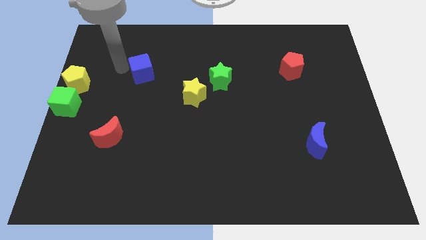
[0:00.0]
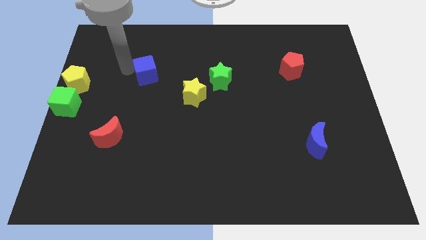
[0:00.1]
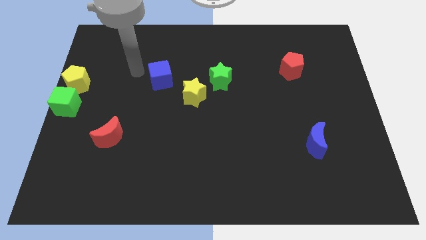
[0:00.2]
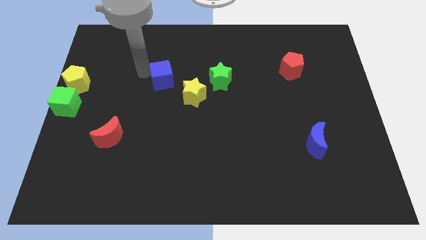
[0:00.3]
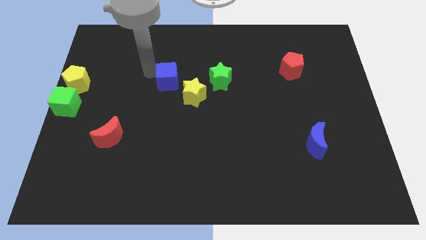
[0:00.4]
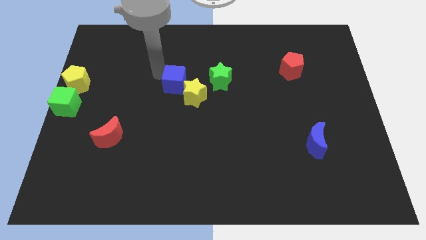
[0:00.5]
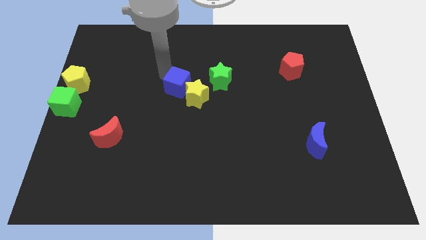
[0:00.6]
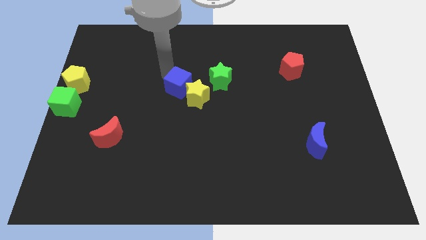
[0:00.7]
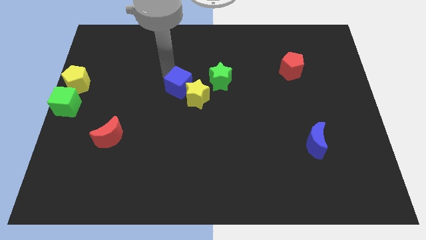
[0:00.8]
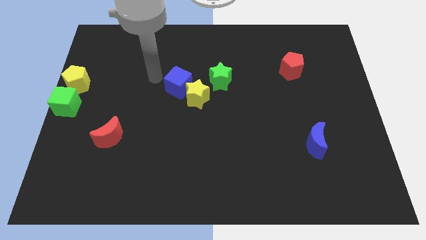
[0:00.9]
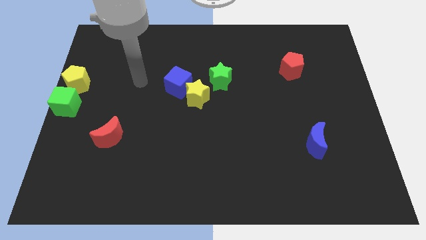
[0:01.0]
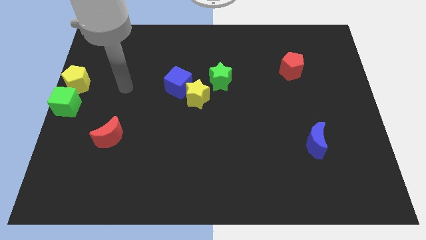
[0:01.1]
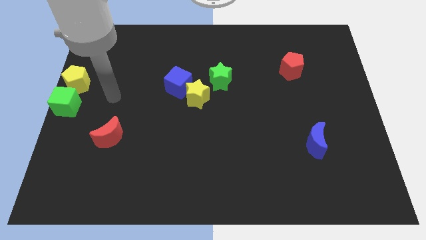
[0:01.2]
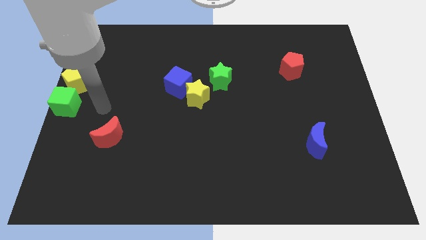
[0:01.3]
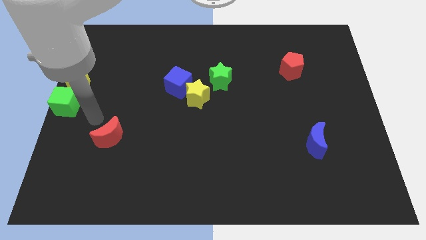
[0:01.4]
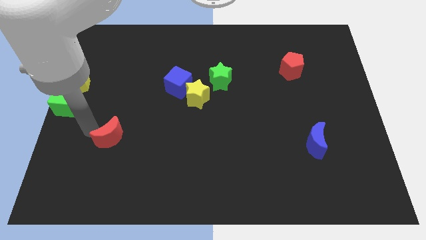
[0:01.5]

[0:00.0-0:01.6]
move blue cube towards the yellow star

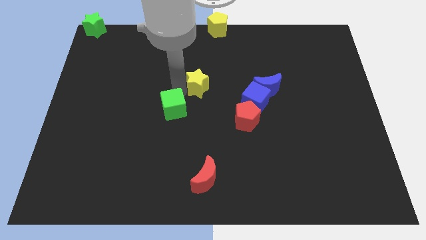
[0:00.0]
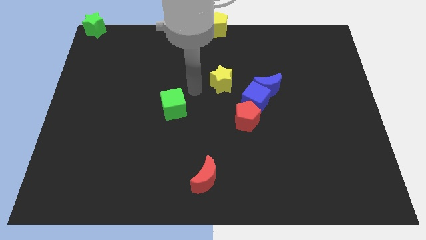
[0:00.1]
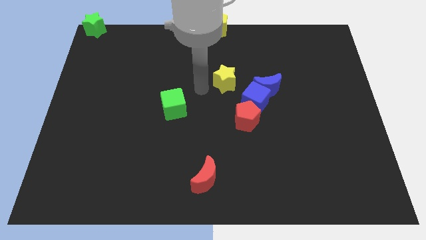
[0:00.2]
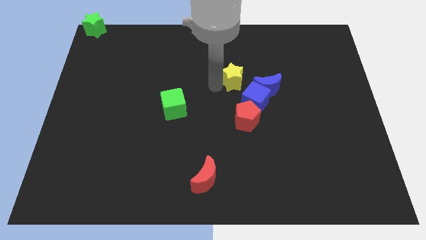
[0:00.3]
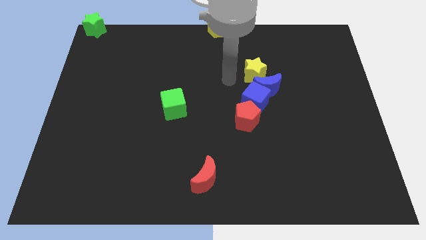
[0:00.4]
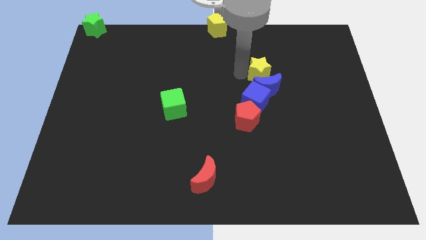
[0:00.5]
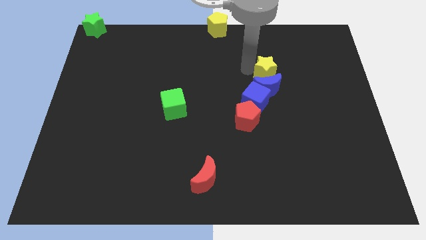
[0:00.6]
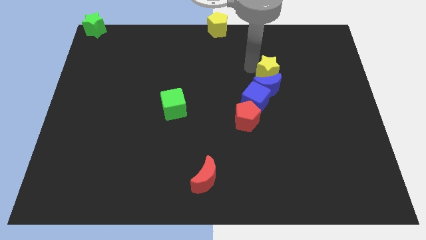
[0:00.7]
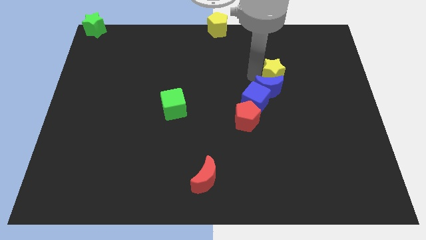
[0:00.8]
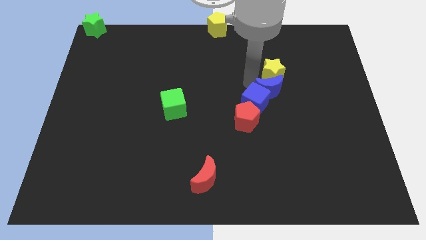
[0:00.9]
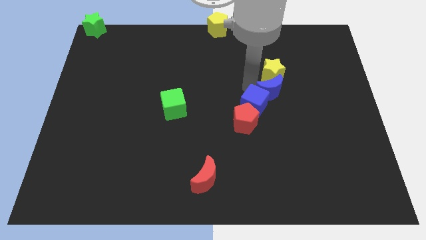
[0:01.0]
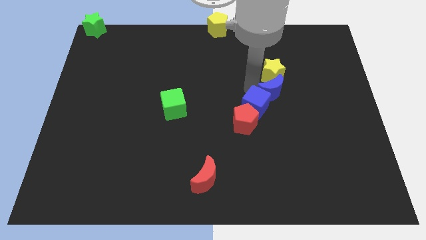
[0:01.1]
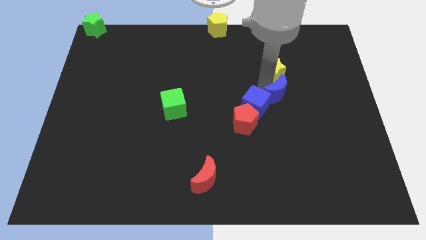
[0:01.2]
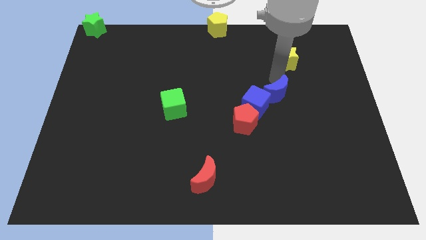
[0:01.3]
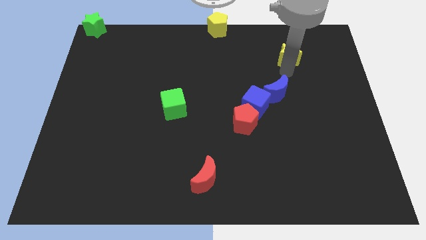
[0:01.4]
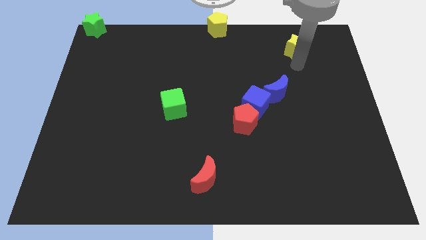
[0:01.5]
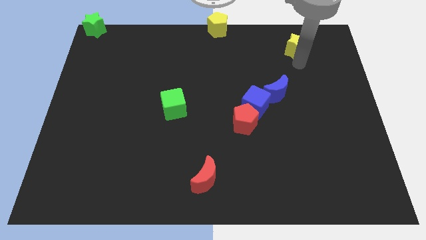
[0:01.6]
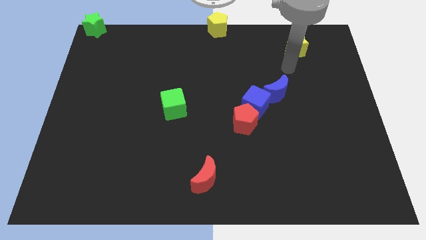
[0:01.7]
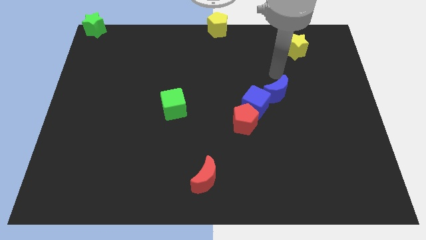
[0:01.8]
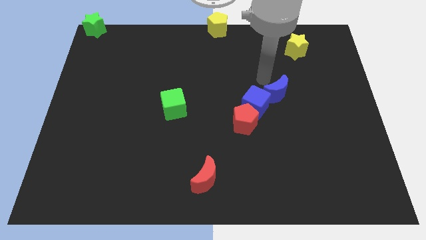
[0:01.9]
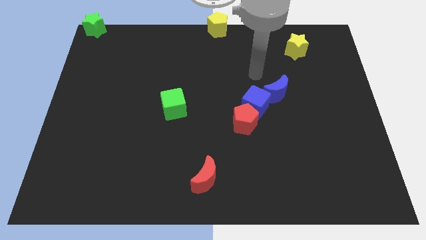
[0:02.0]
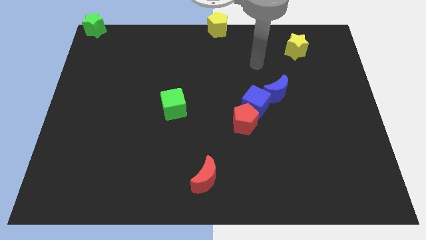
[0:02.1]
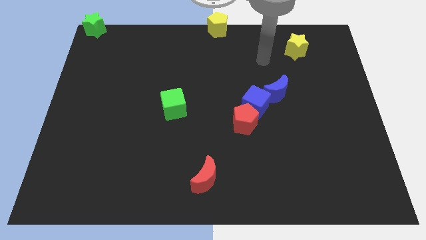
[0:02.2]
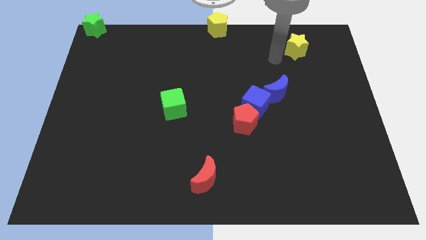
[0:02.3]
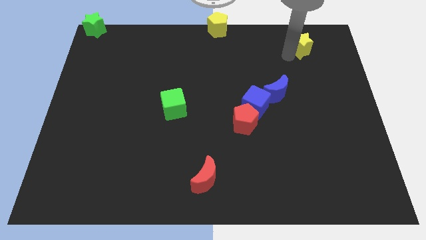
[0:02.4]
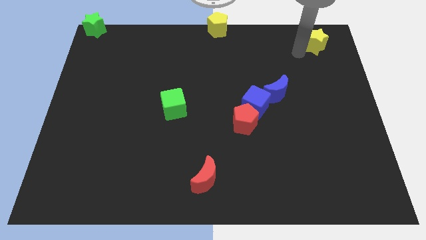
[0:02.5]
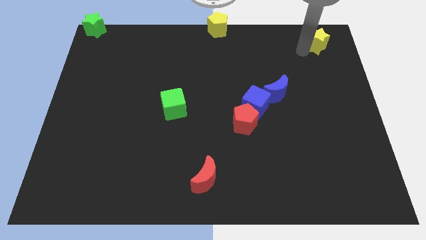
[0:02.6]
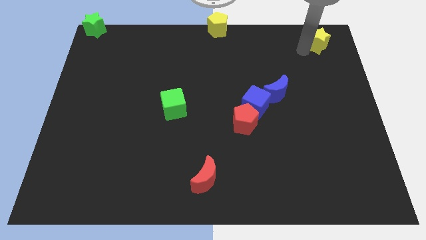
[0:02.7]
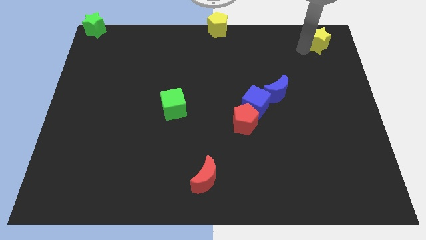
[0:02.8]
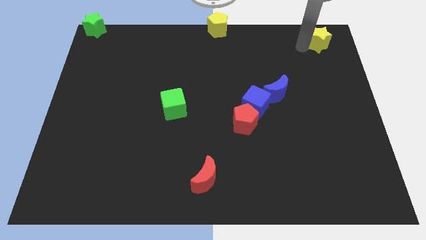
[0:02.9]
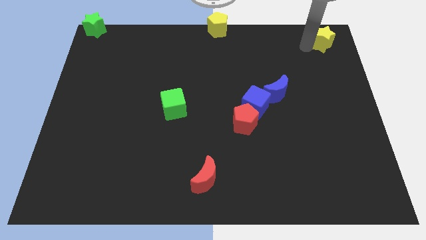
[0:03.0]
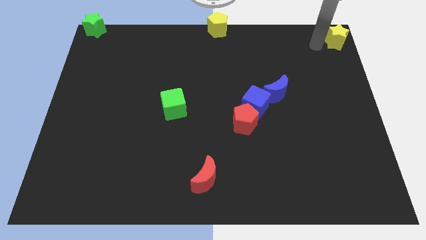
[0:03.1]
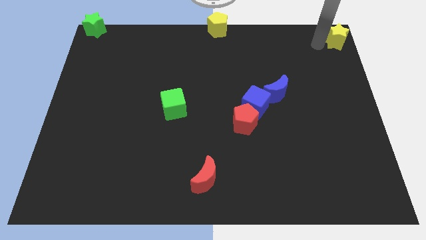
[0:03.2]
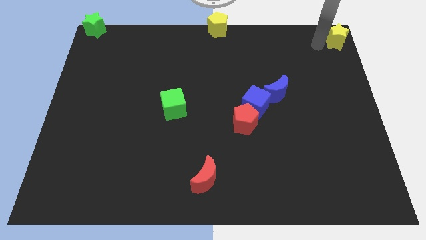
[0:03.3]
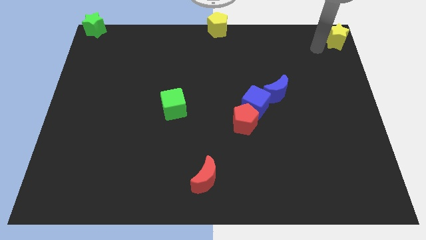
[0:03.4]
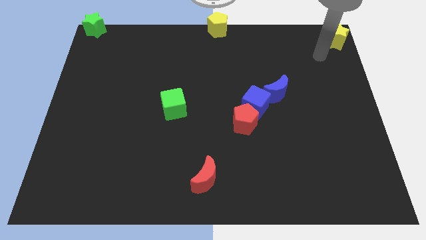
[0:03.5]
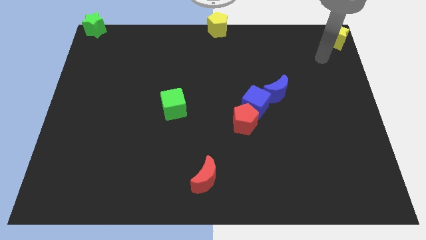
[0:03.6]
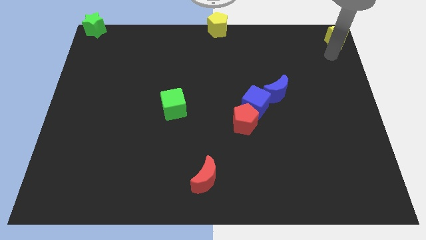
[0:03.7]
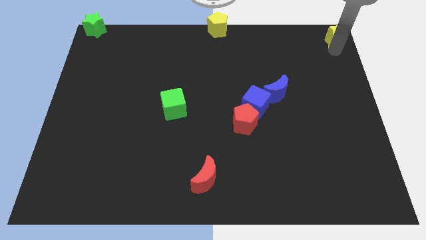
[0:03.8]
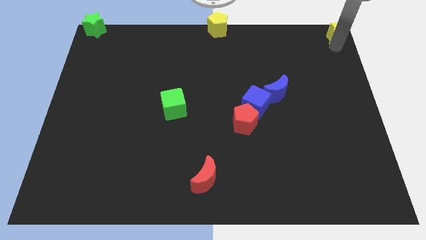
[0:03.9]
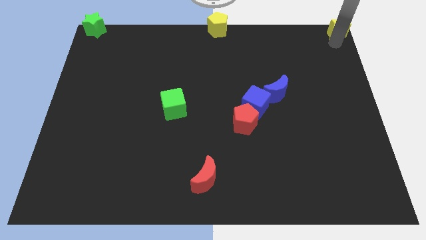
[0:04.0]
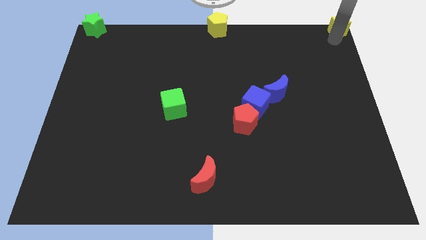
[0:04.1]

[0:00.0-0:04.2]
push the yellow star to the top right of the board

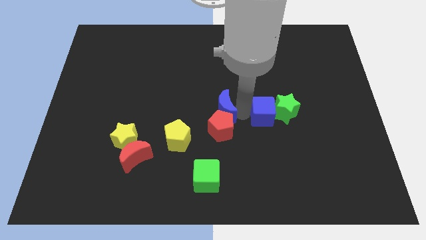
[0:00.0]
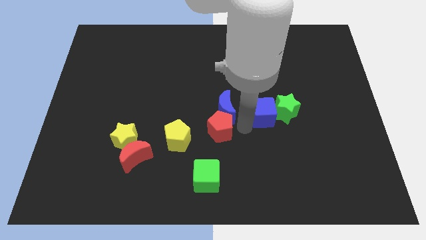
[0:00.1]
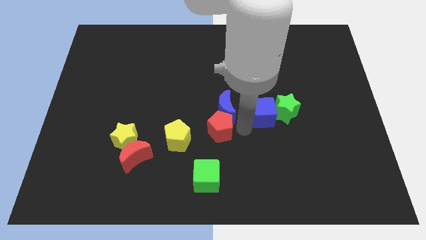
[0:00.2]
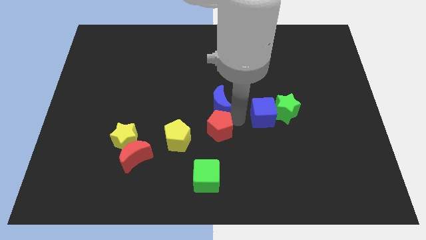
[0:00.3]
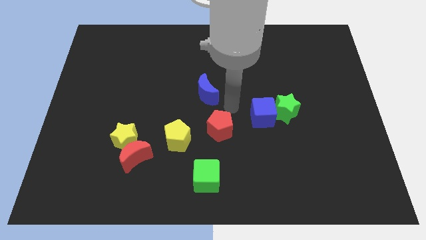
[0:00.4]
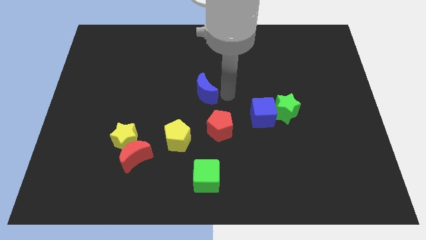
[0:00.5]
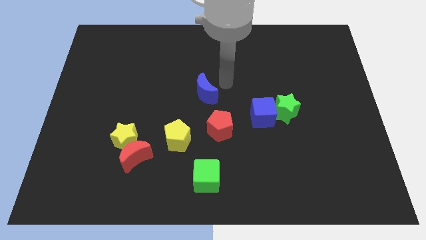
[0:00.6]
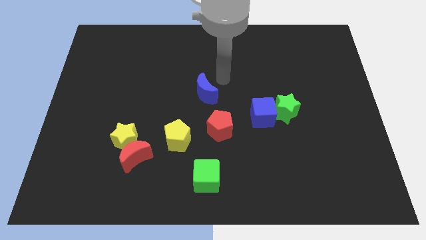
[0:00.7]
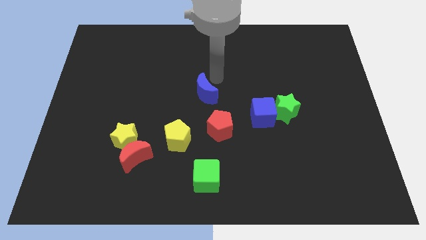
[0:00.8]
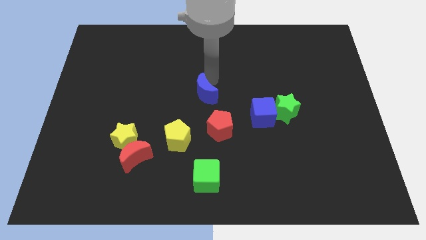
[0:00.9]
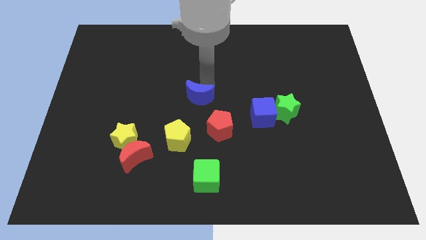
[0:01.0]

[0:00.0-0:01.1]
move the blue crescent to the top

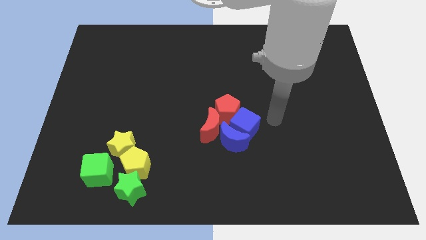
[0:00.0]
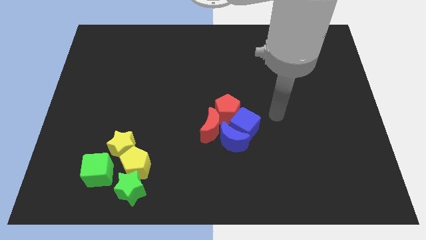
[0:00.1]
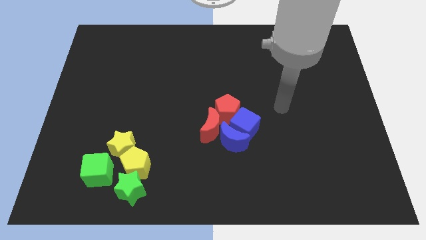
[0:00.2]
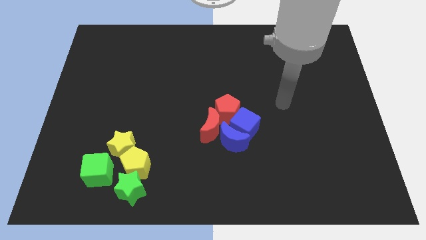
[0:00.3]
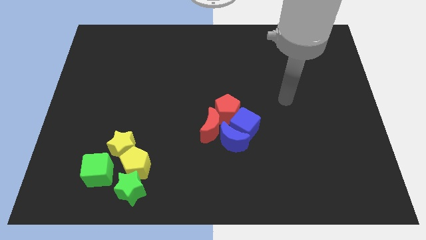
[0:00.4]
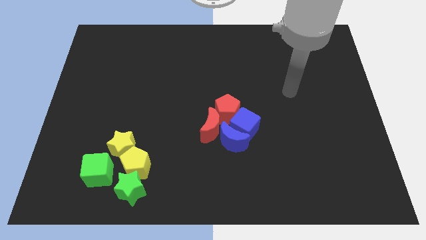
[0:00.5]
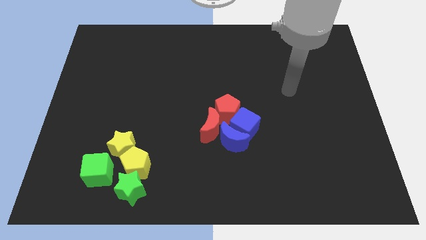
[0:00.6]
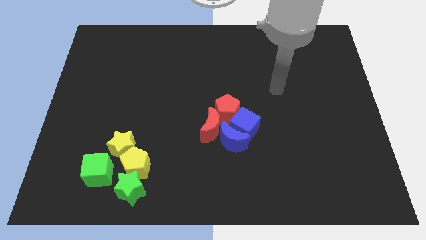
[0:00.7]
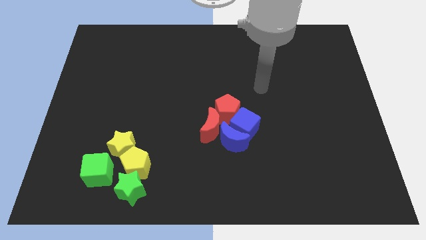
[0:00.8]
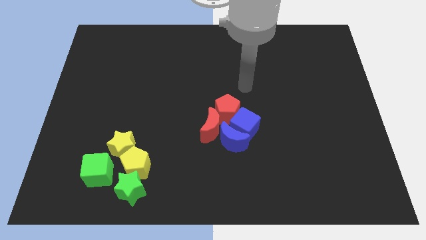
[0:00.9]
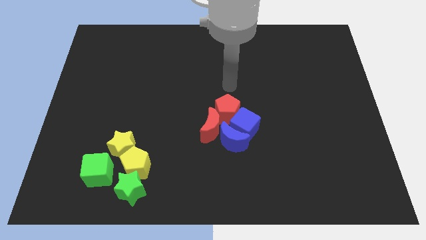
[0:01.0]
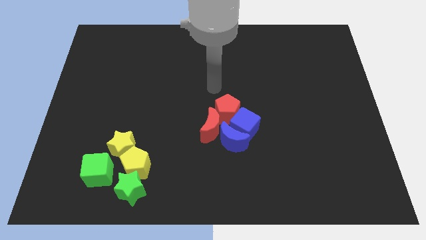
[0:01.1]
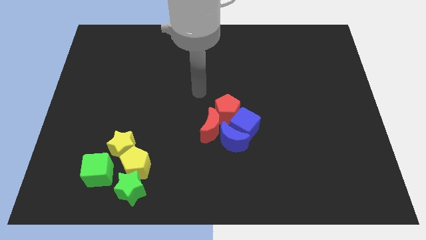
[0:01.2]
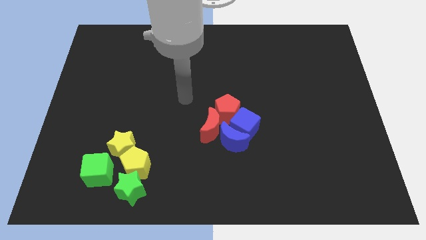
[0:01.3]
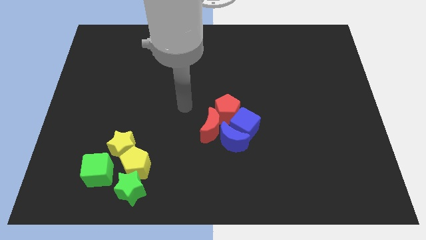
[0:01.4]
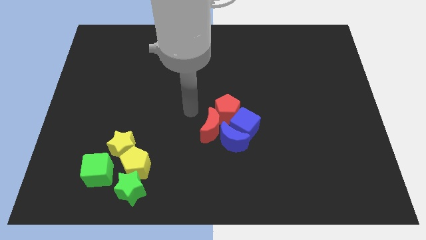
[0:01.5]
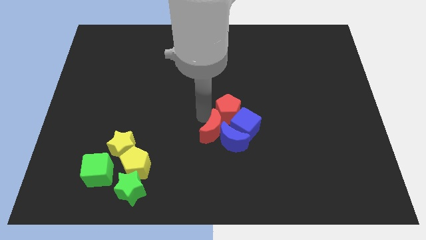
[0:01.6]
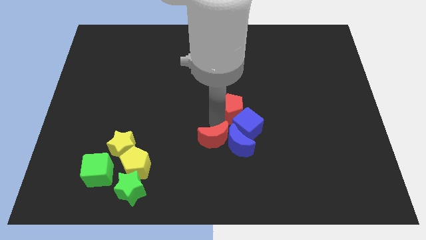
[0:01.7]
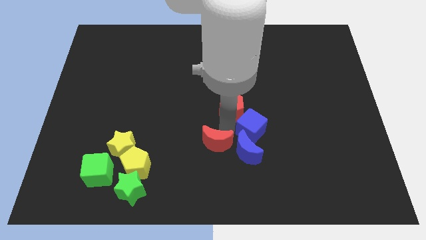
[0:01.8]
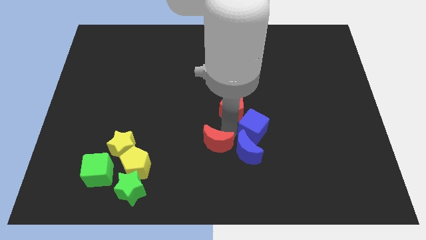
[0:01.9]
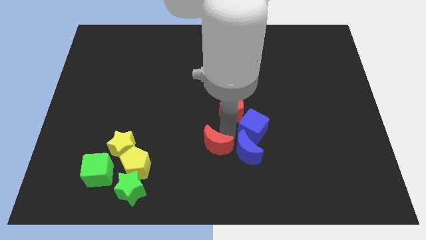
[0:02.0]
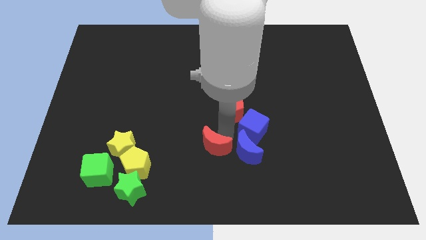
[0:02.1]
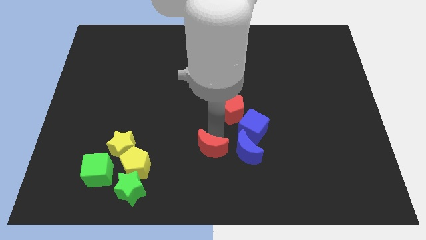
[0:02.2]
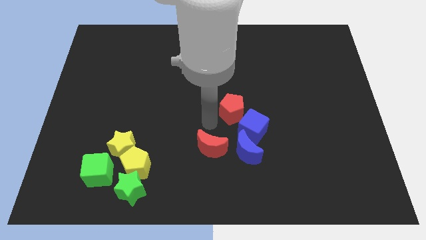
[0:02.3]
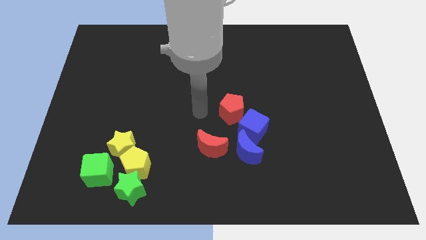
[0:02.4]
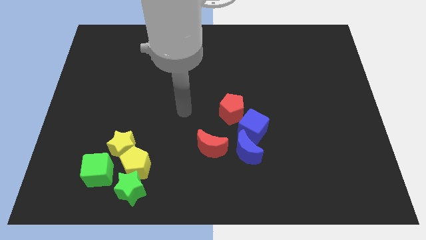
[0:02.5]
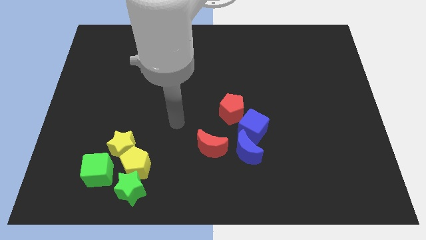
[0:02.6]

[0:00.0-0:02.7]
separate the red blocks
